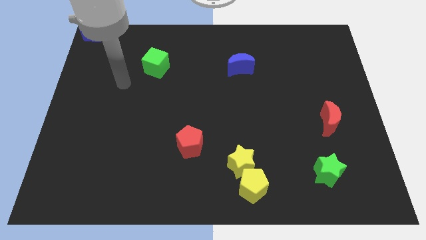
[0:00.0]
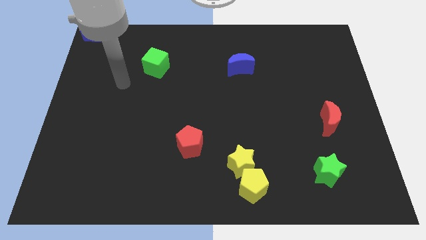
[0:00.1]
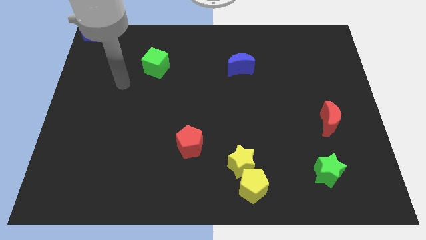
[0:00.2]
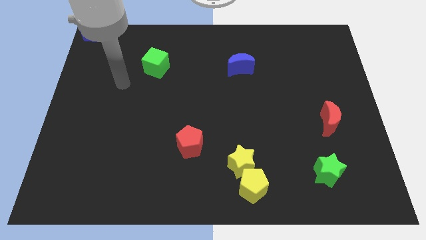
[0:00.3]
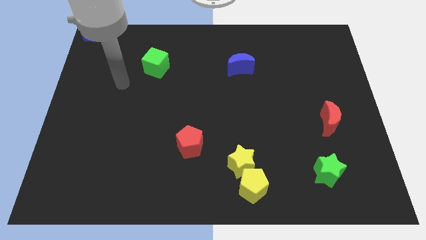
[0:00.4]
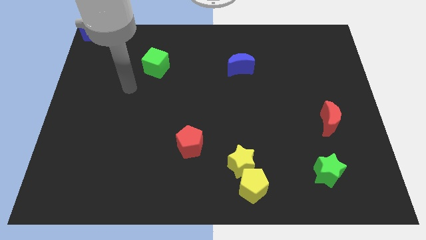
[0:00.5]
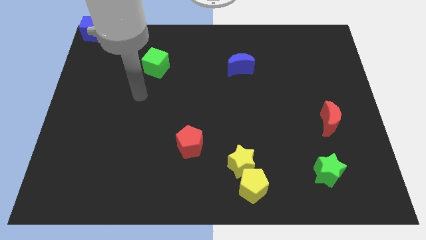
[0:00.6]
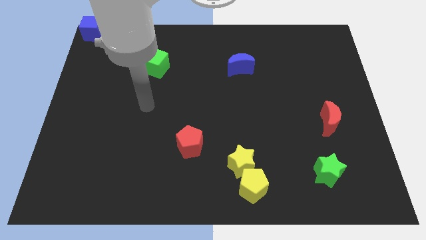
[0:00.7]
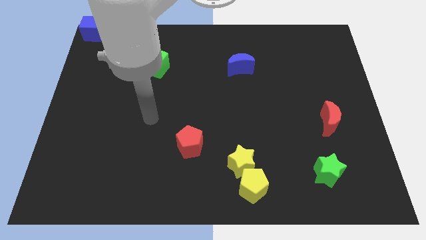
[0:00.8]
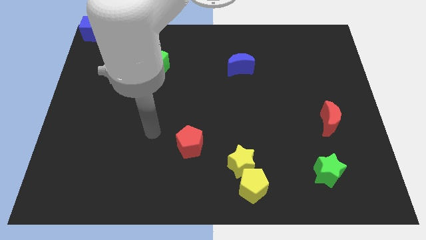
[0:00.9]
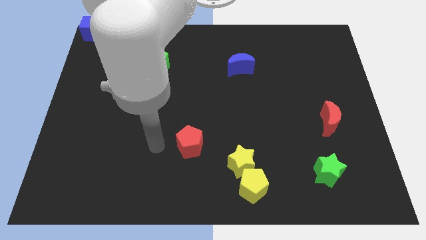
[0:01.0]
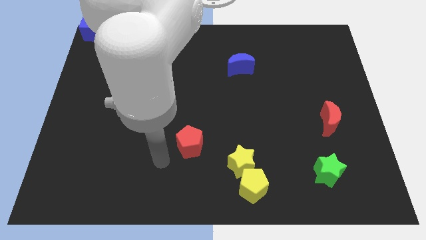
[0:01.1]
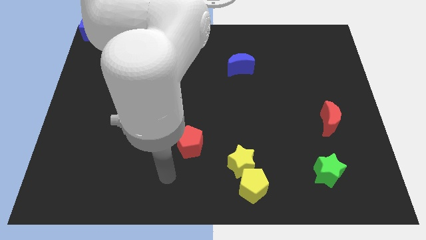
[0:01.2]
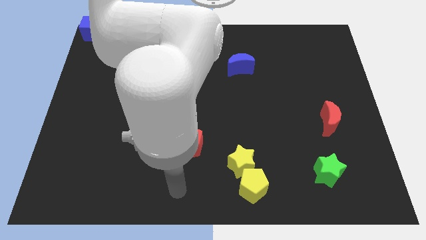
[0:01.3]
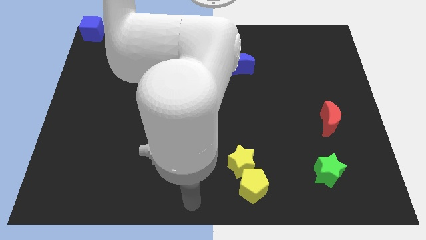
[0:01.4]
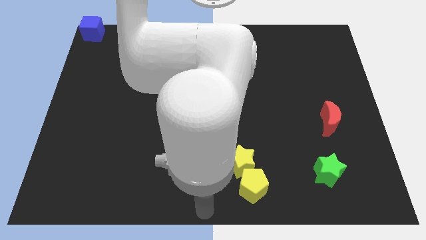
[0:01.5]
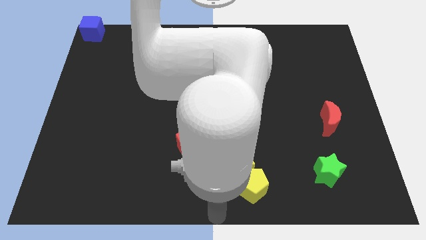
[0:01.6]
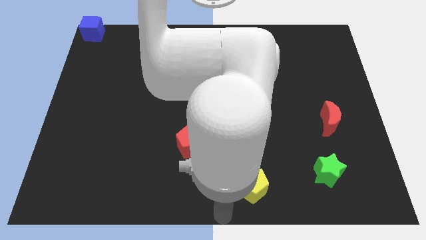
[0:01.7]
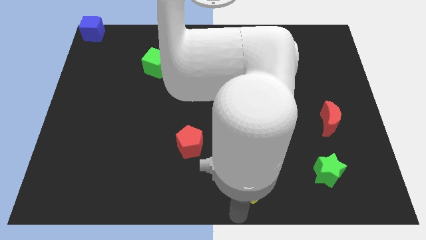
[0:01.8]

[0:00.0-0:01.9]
place the arm at the bottom of the yellow pentagon

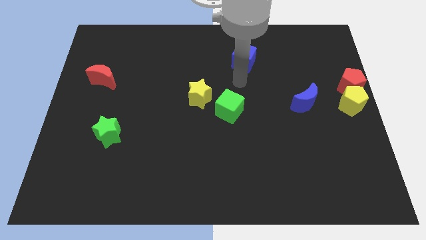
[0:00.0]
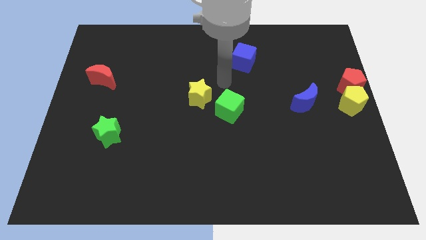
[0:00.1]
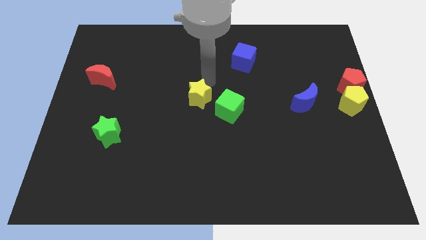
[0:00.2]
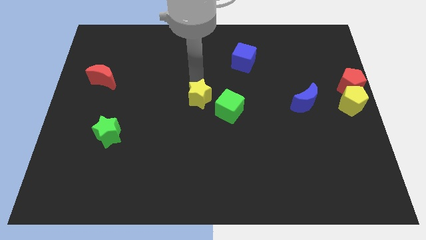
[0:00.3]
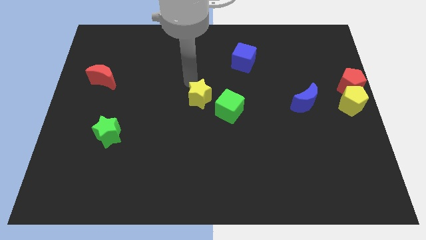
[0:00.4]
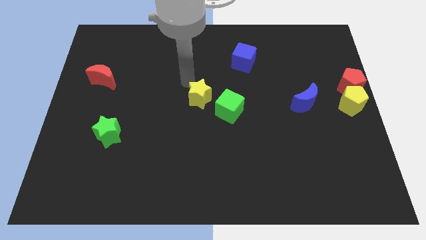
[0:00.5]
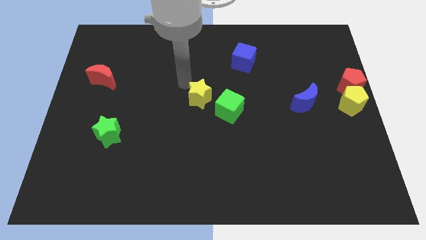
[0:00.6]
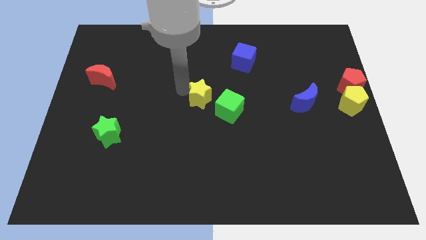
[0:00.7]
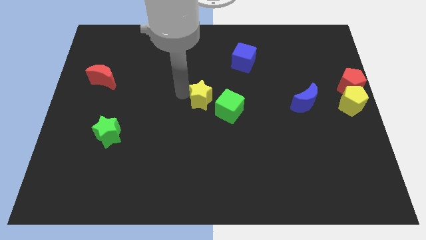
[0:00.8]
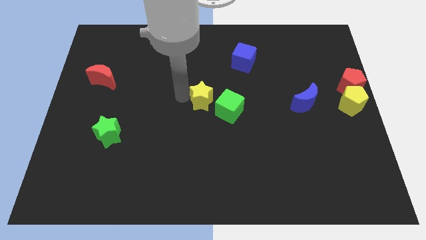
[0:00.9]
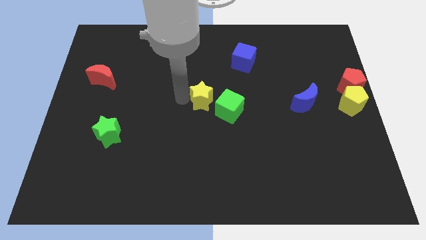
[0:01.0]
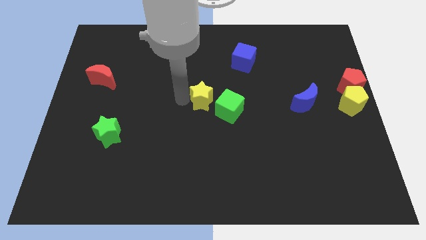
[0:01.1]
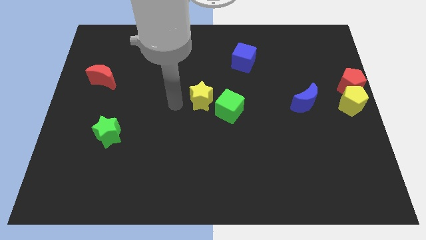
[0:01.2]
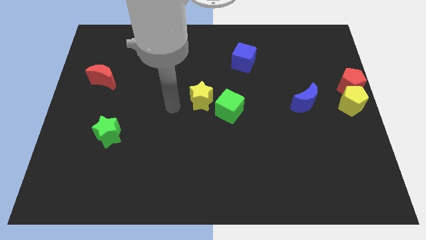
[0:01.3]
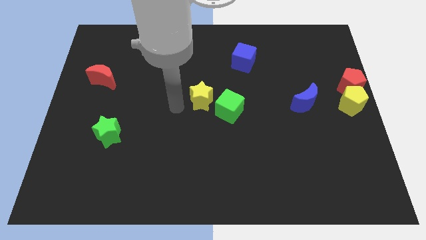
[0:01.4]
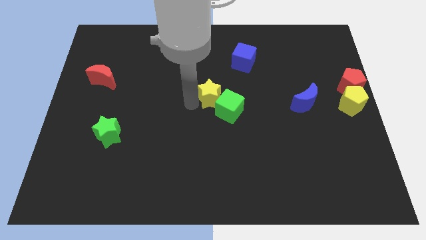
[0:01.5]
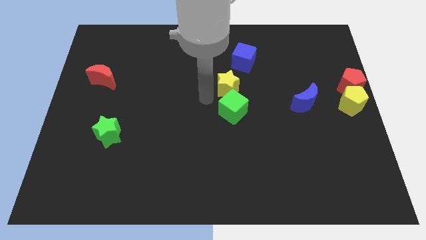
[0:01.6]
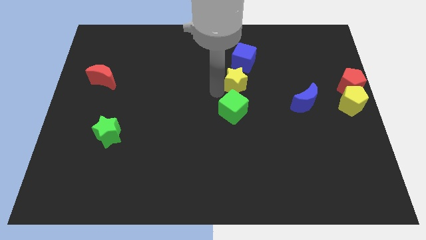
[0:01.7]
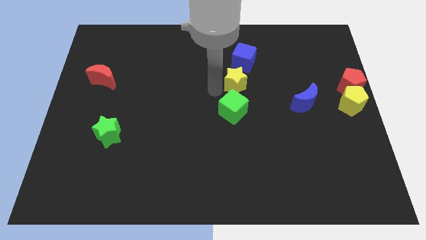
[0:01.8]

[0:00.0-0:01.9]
place the yellow star to the top side of the green cube

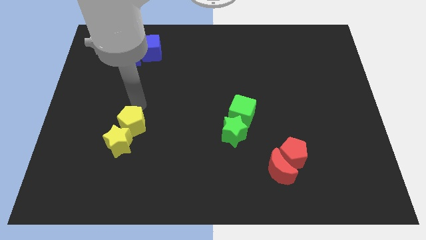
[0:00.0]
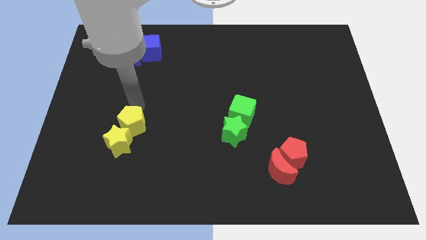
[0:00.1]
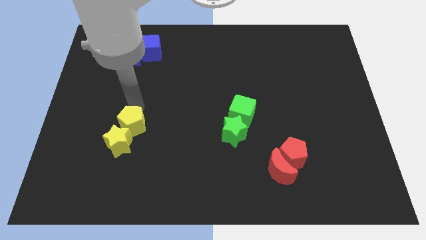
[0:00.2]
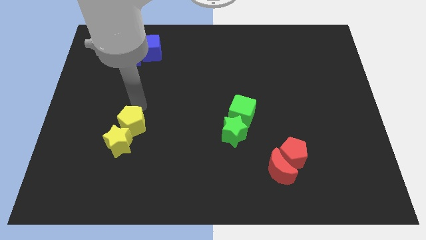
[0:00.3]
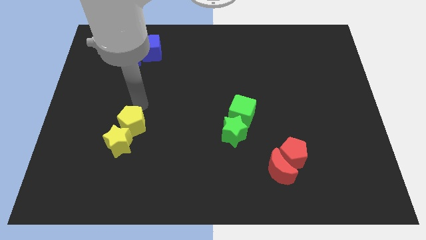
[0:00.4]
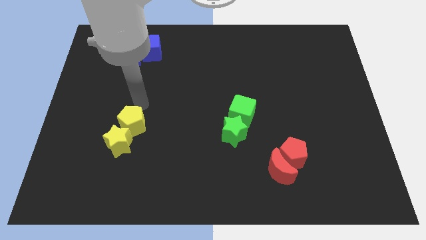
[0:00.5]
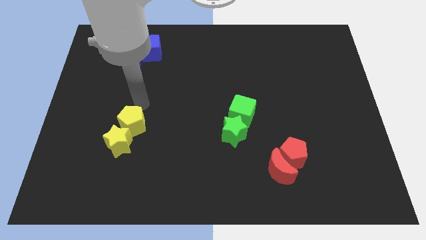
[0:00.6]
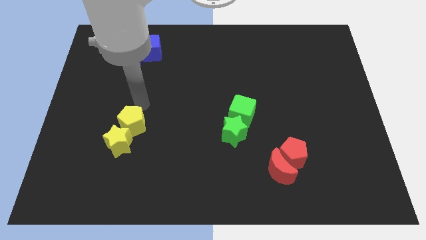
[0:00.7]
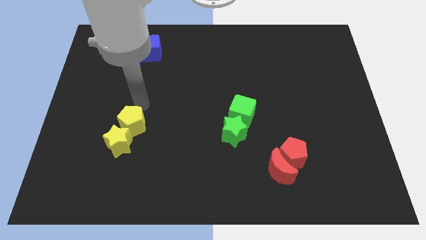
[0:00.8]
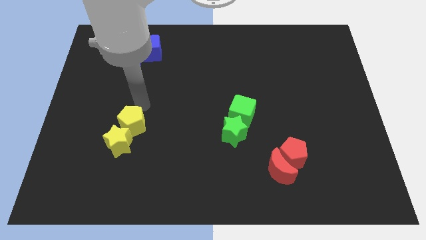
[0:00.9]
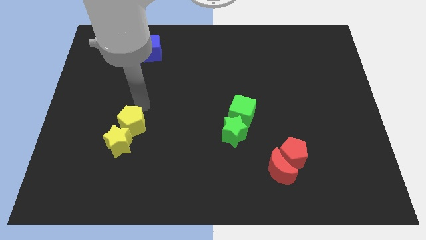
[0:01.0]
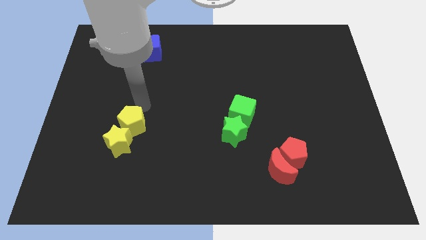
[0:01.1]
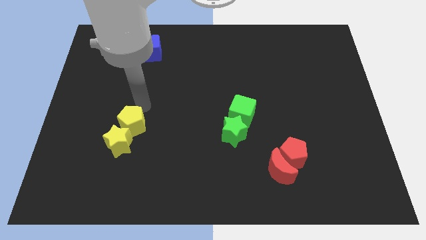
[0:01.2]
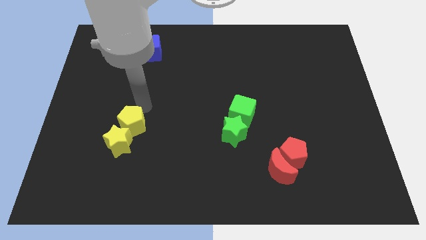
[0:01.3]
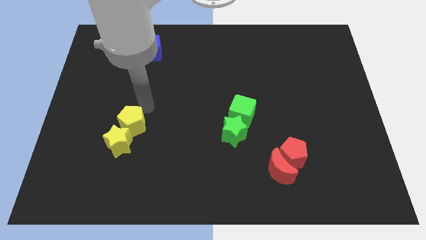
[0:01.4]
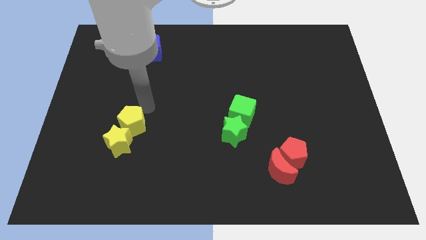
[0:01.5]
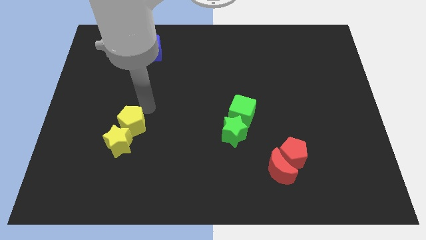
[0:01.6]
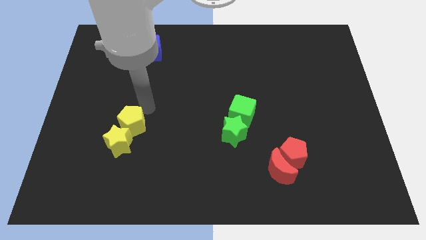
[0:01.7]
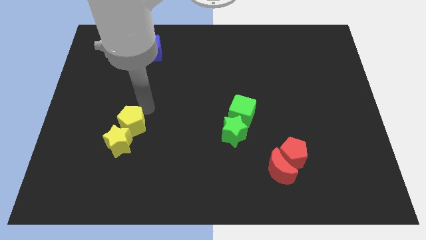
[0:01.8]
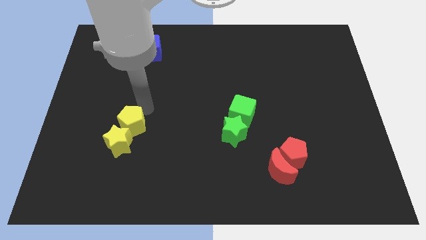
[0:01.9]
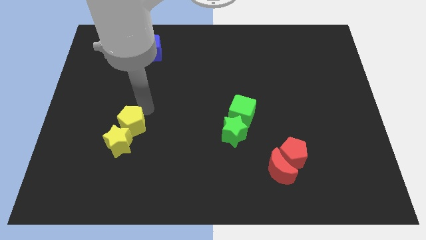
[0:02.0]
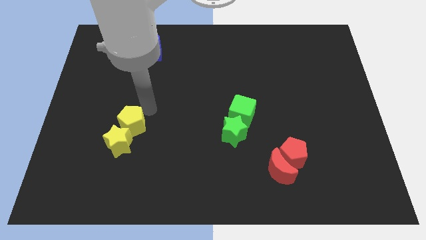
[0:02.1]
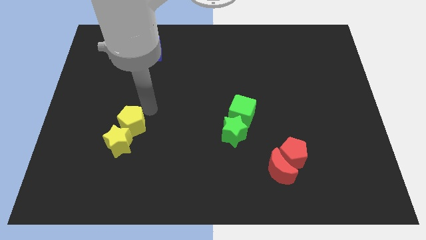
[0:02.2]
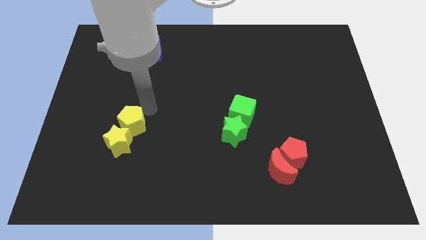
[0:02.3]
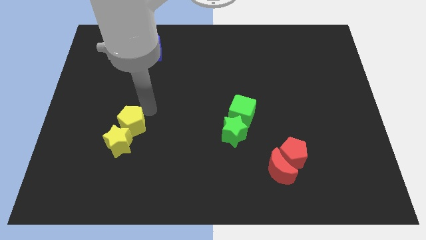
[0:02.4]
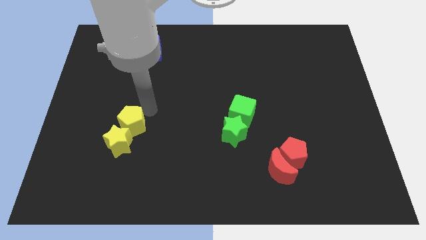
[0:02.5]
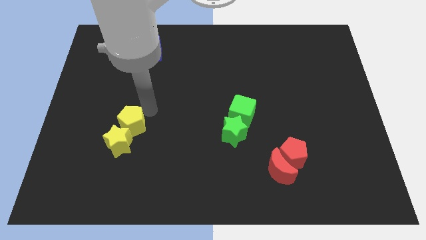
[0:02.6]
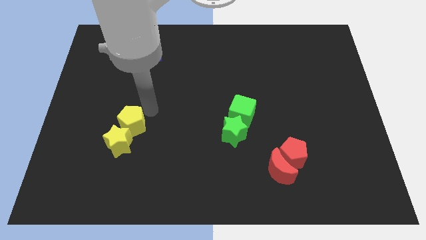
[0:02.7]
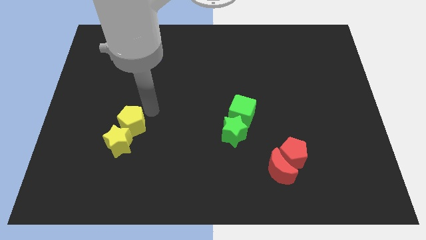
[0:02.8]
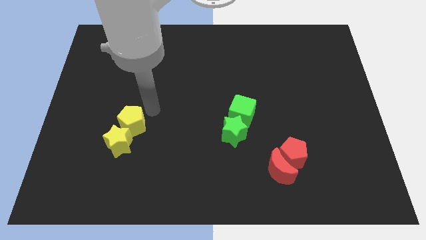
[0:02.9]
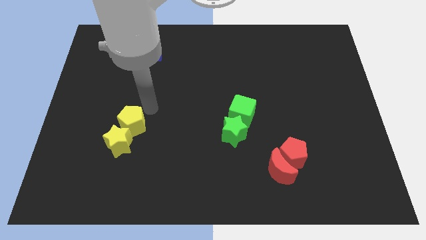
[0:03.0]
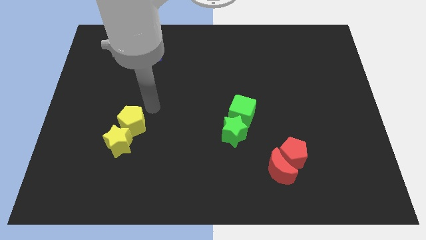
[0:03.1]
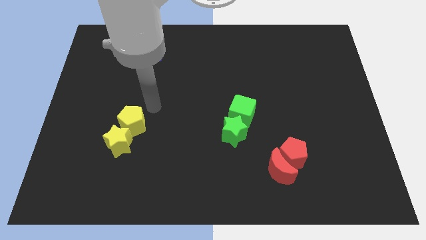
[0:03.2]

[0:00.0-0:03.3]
place the arm at the top right side of the yellow pentagon

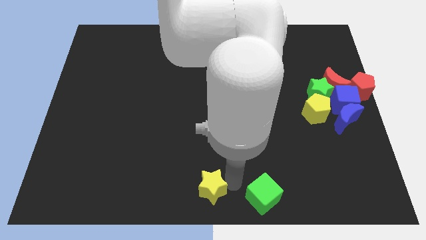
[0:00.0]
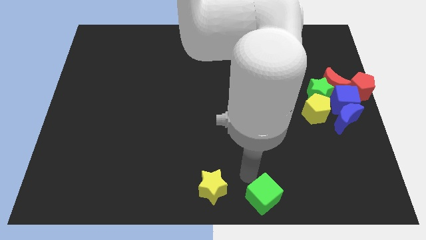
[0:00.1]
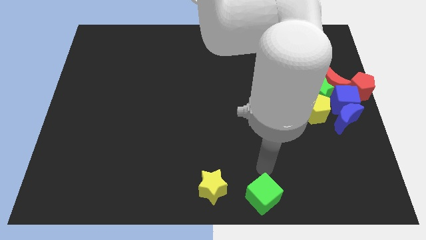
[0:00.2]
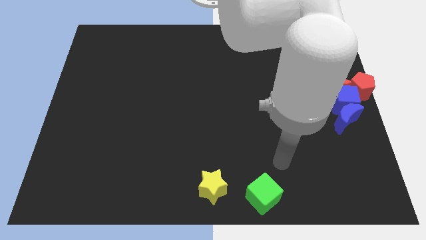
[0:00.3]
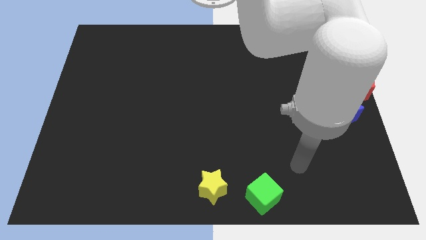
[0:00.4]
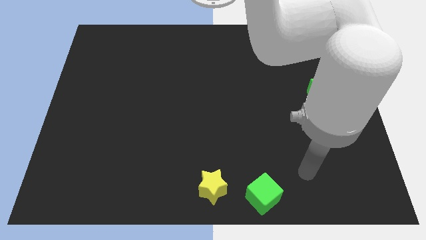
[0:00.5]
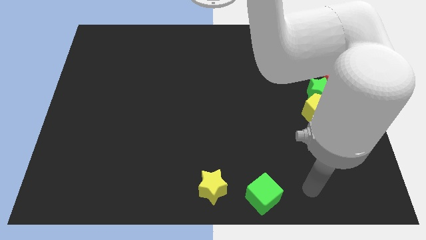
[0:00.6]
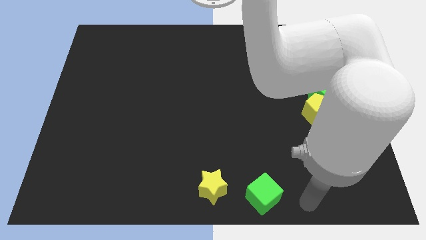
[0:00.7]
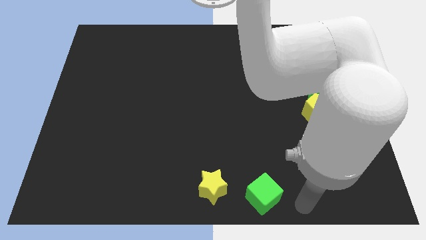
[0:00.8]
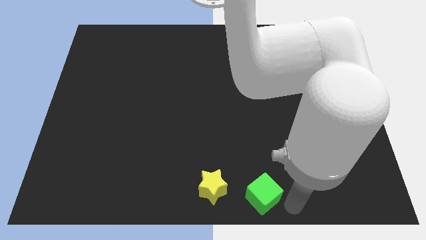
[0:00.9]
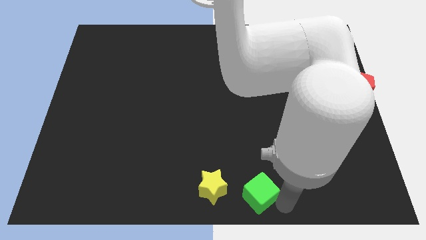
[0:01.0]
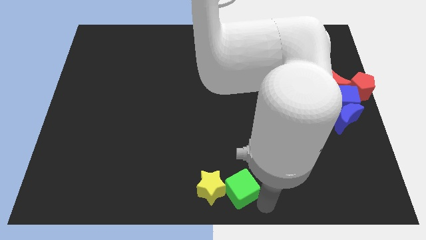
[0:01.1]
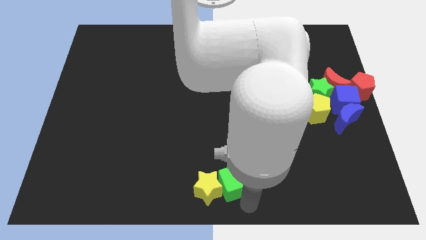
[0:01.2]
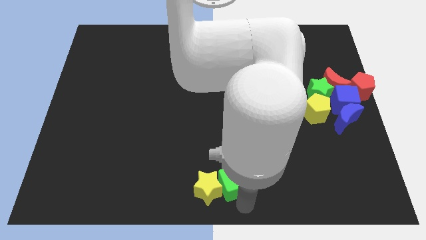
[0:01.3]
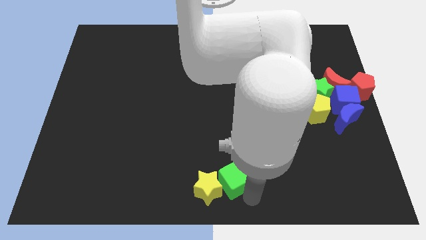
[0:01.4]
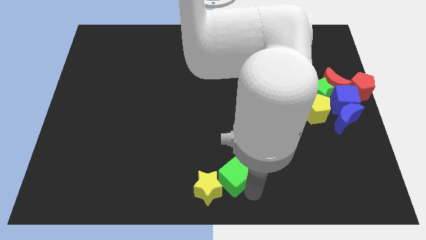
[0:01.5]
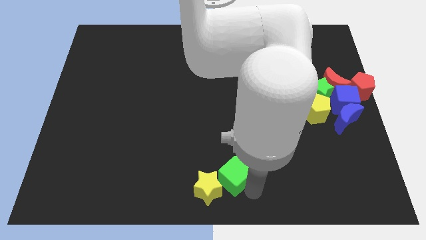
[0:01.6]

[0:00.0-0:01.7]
push the green cube into the yellow star
